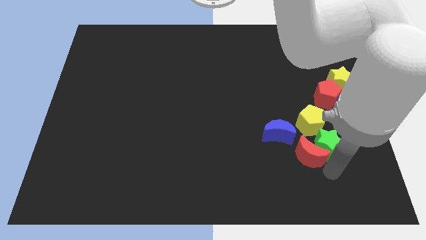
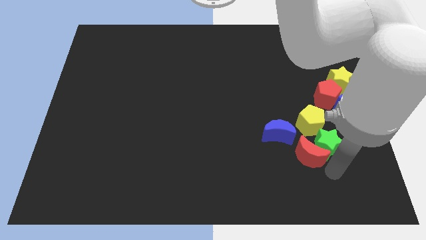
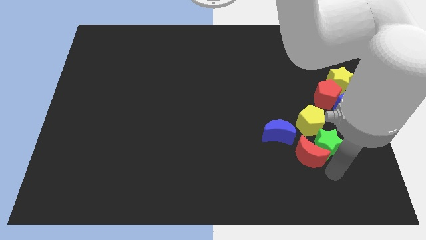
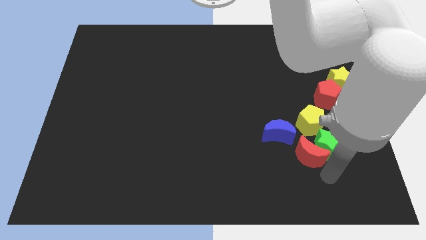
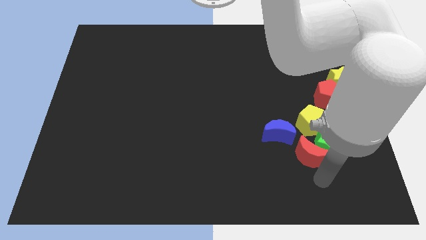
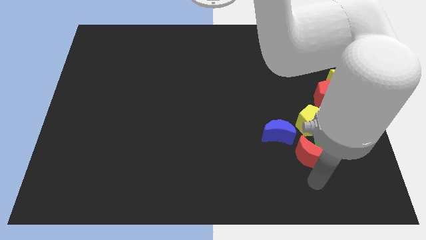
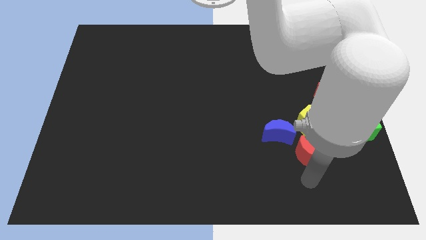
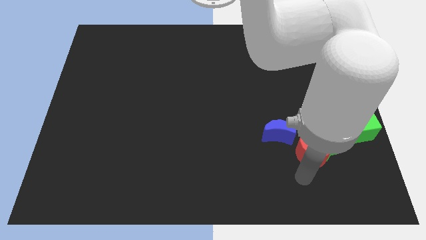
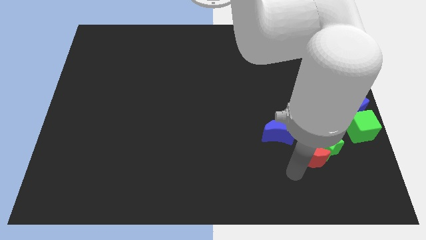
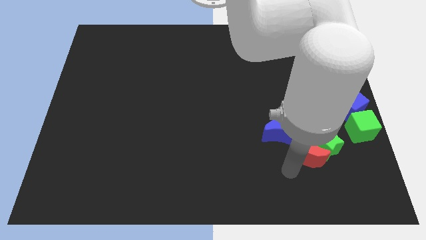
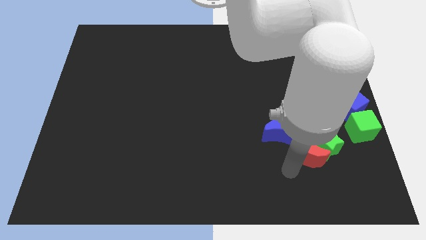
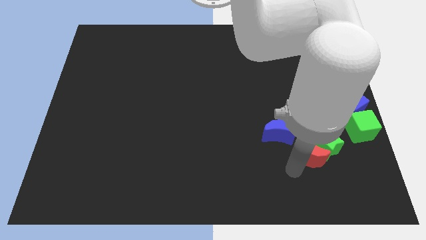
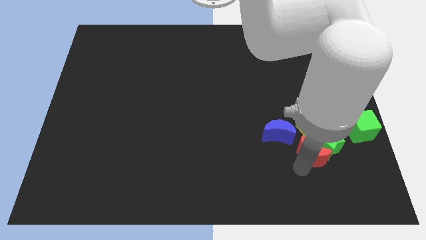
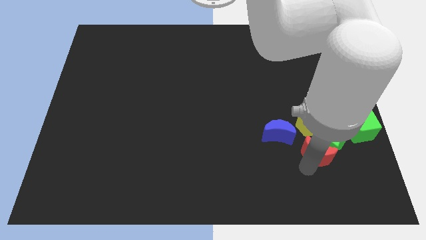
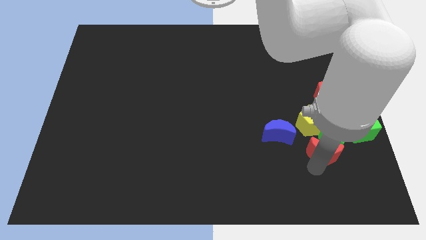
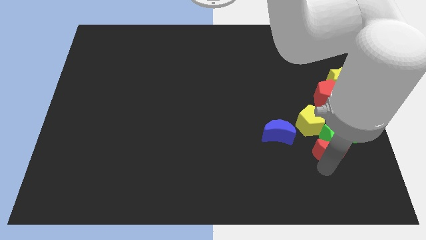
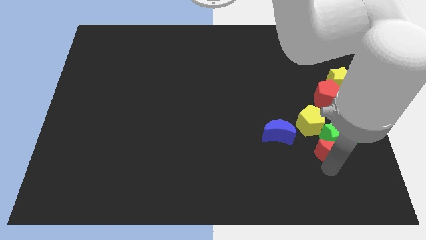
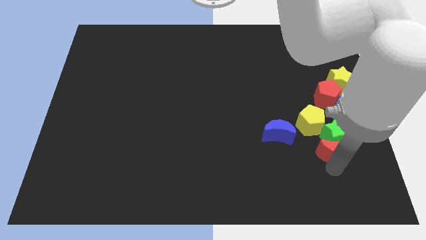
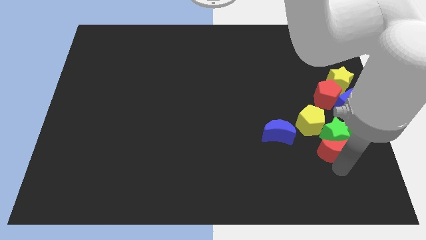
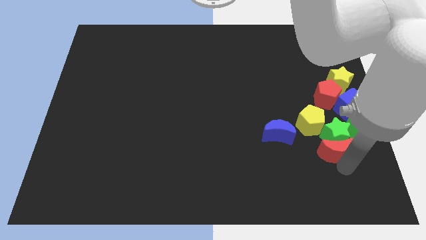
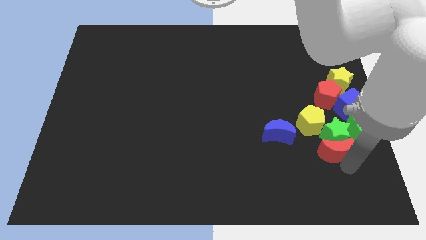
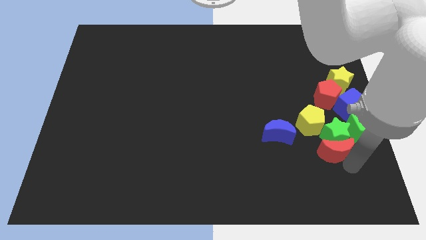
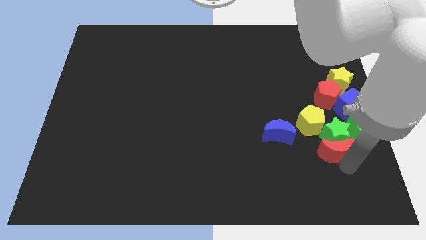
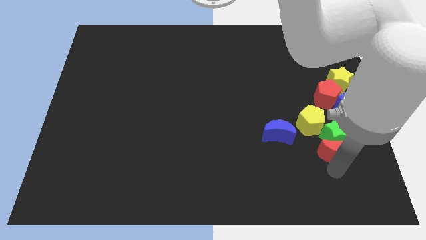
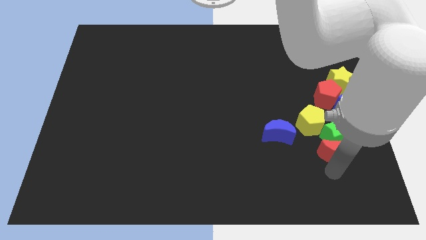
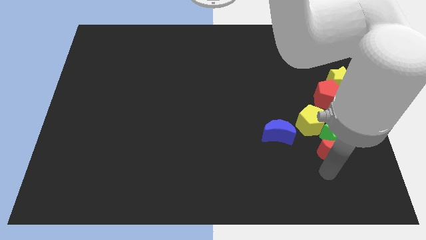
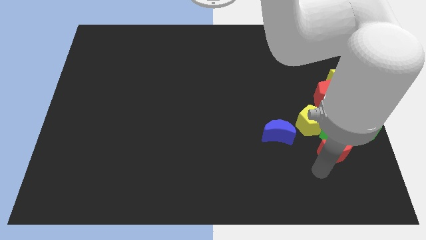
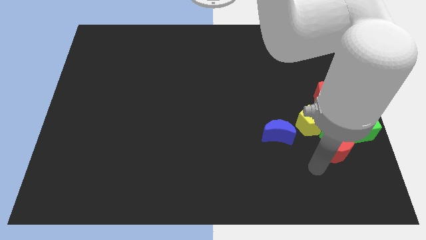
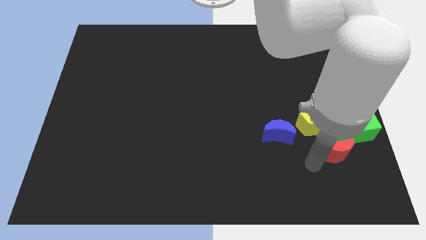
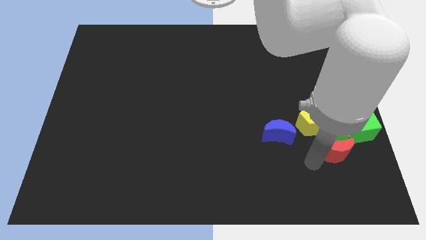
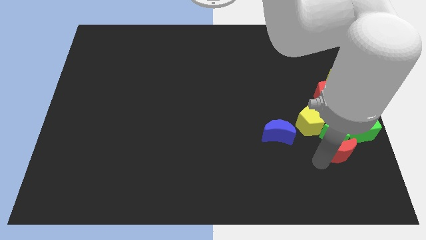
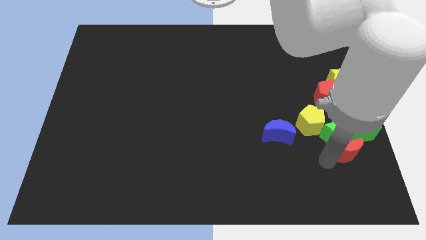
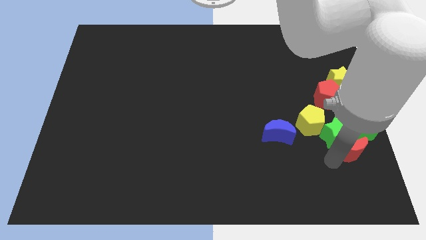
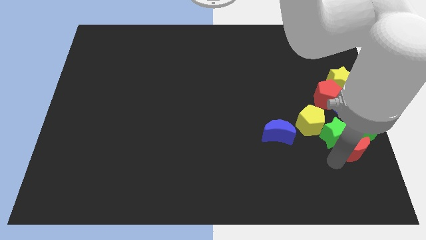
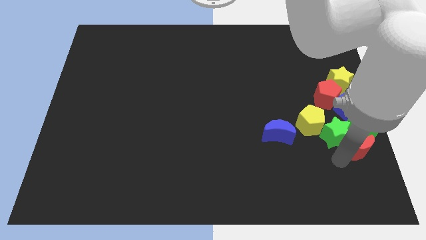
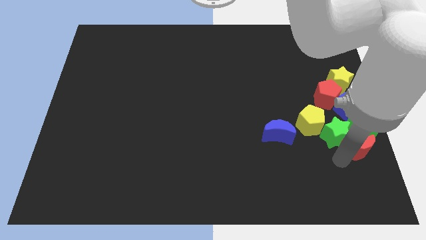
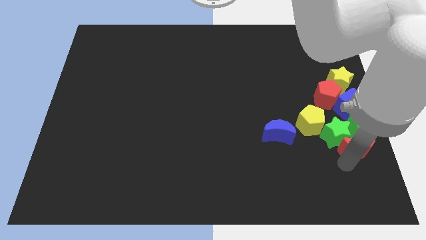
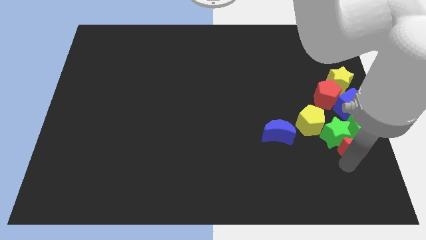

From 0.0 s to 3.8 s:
place the red moon down to the green star and the green cube

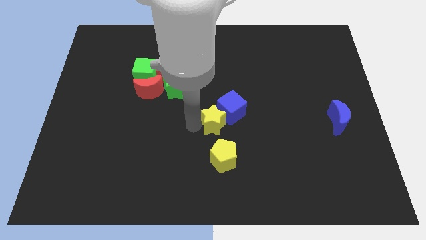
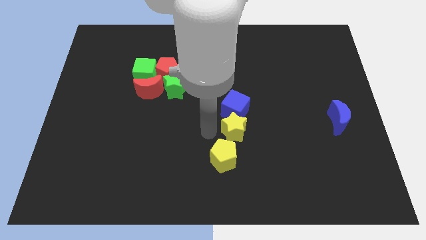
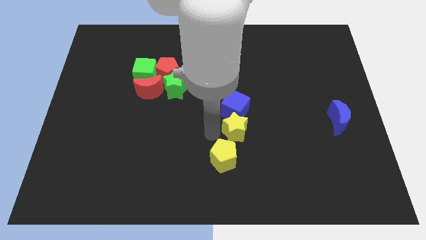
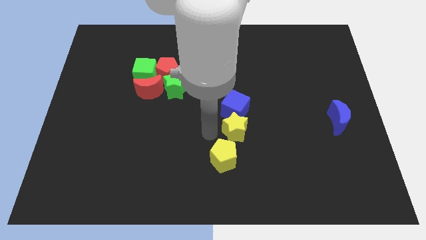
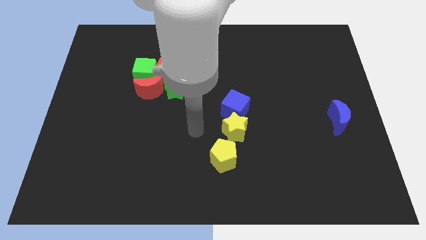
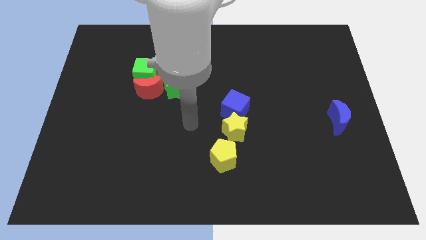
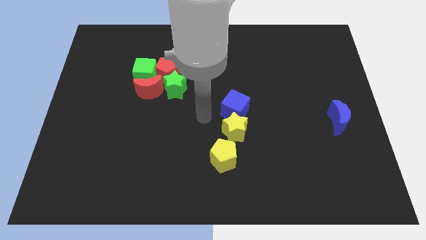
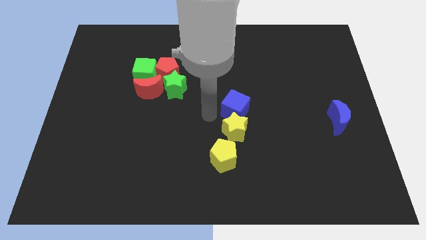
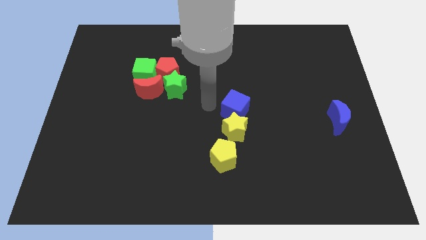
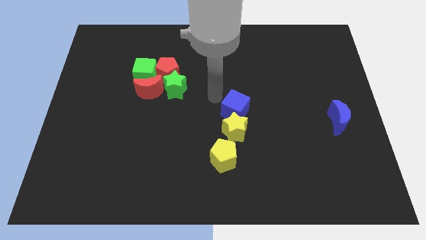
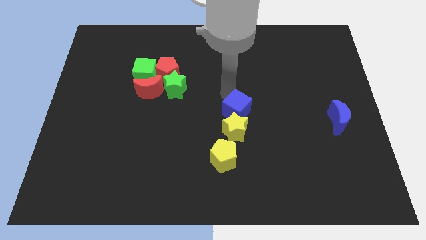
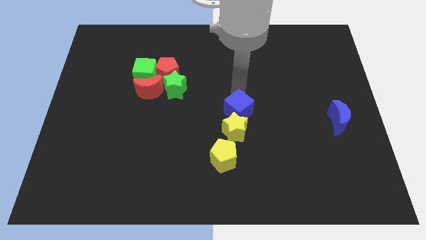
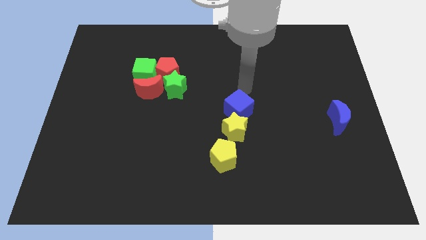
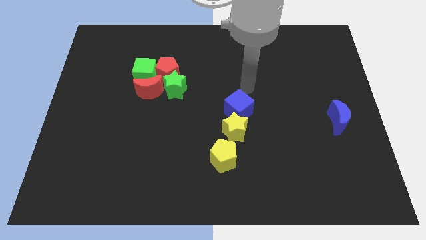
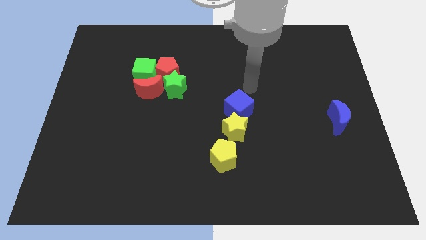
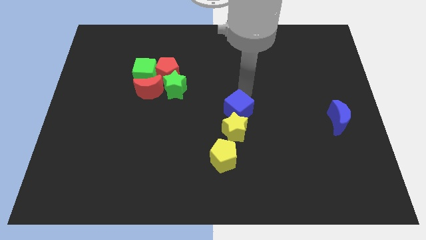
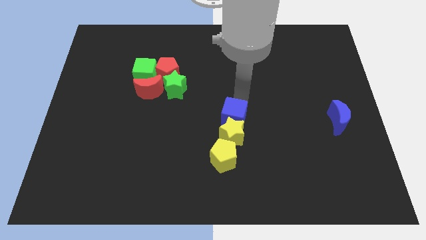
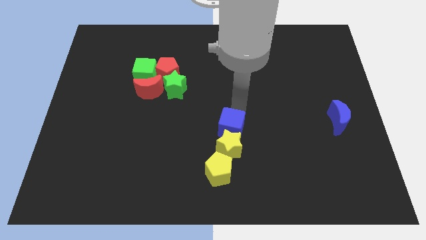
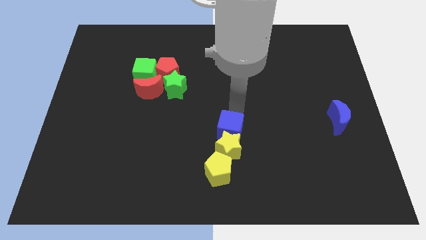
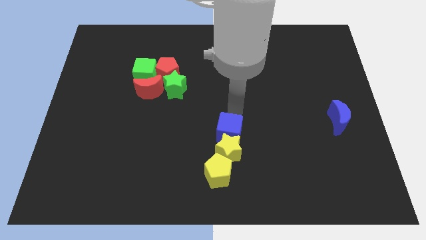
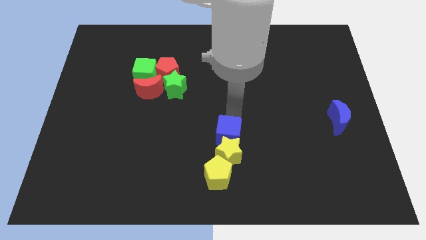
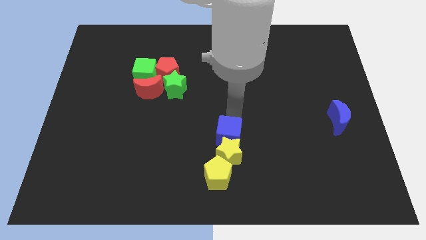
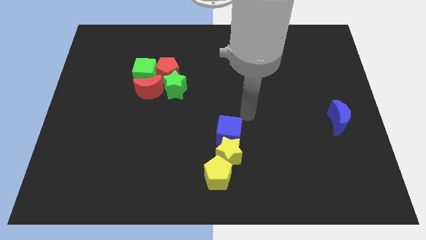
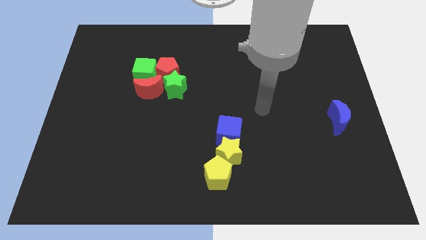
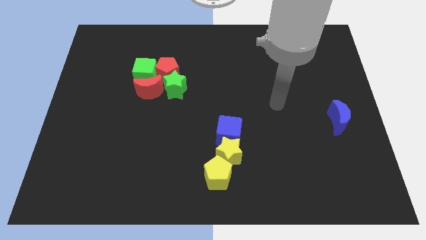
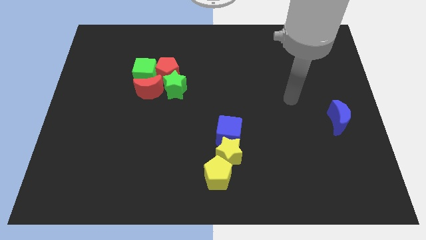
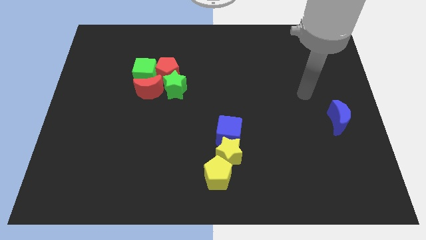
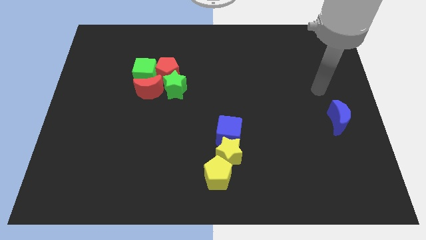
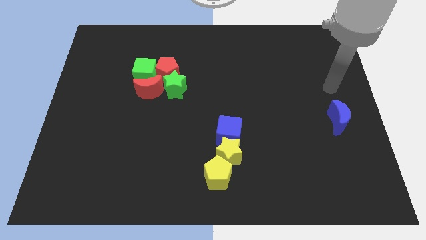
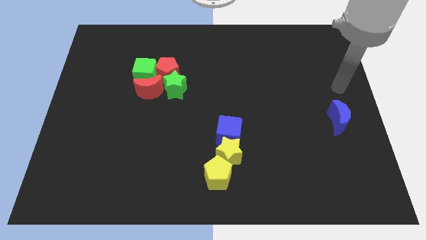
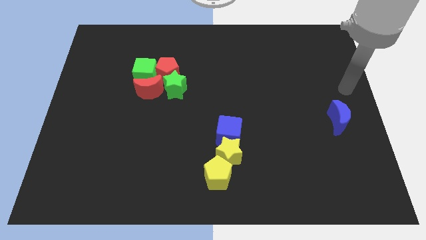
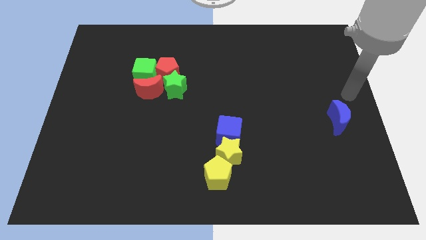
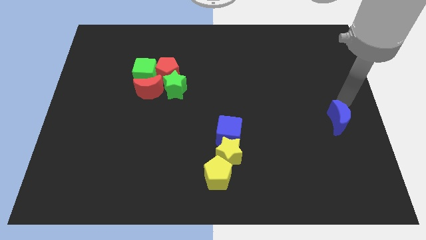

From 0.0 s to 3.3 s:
move the blue cube and yellow blocks towards the bottom side of the table

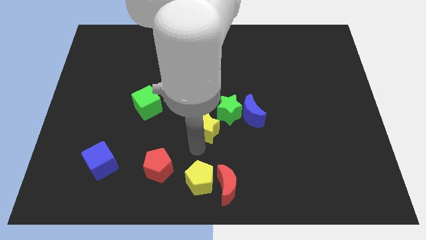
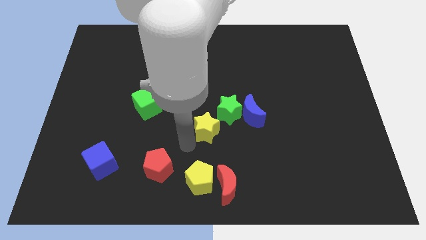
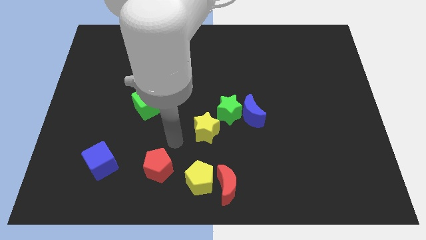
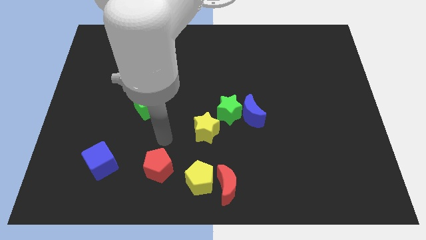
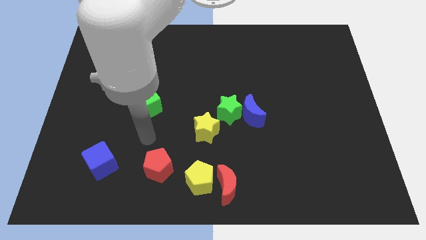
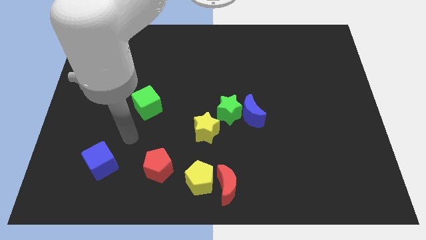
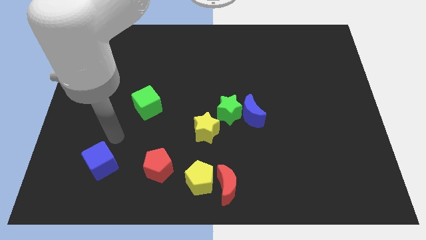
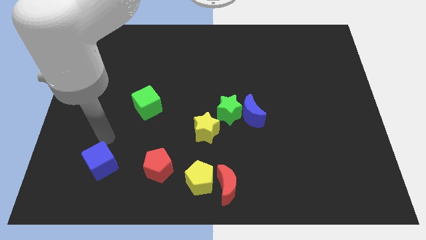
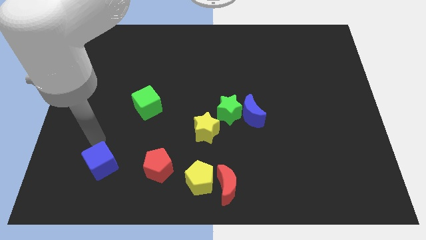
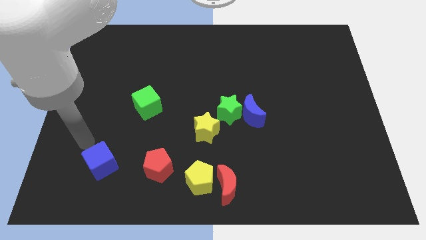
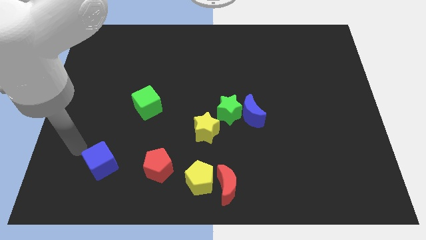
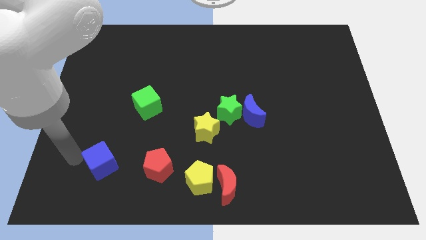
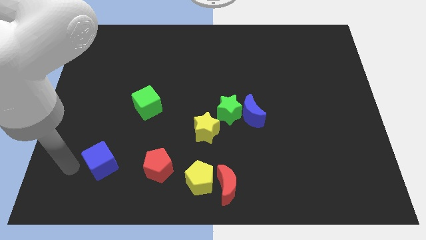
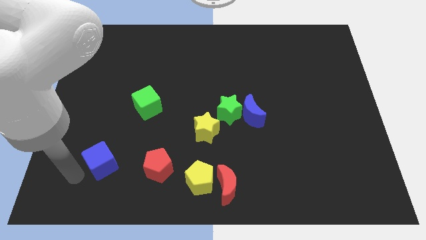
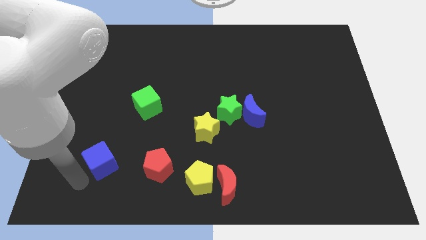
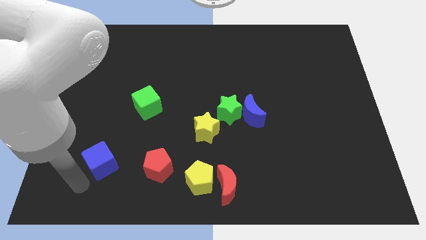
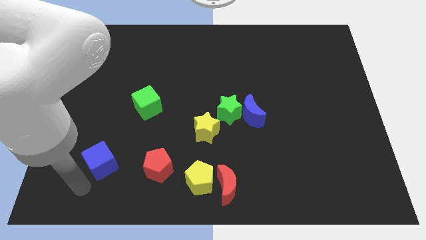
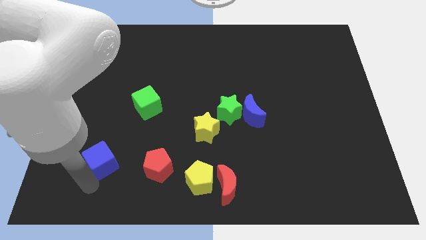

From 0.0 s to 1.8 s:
move your arm towards the blue cube
